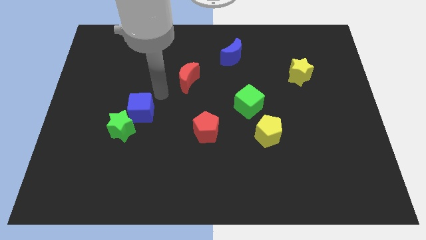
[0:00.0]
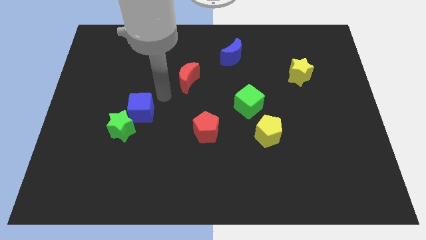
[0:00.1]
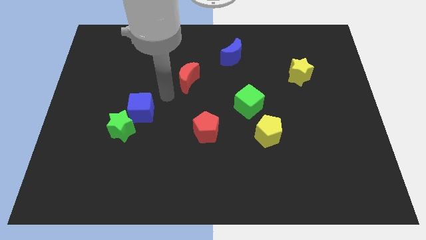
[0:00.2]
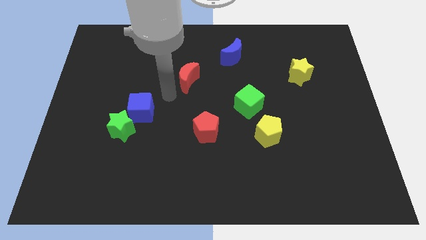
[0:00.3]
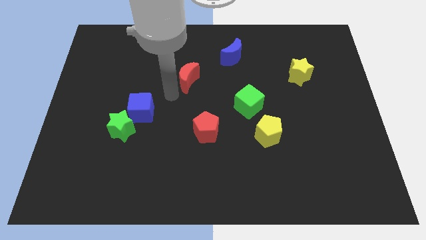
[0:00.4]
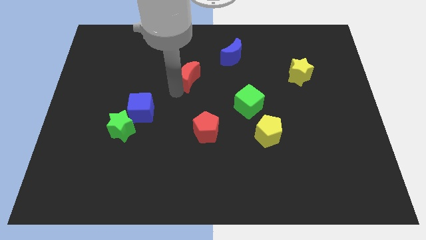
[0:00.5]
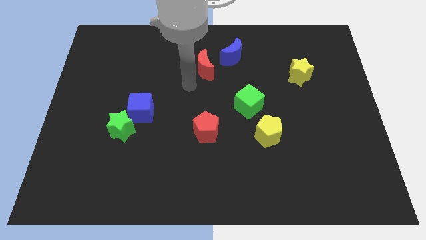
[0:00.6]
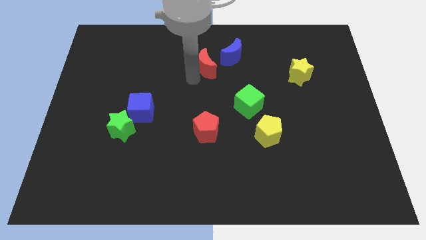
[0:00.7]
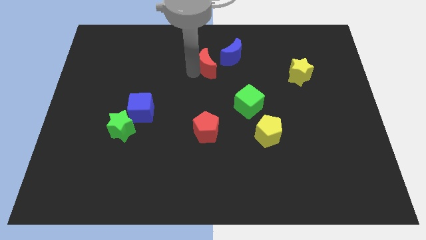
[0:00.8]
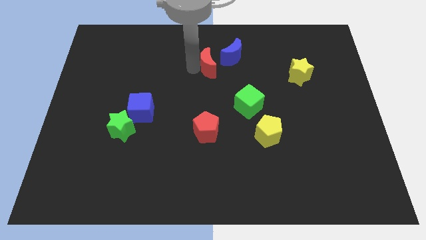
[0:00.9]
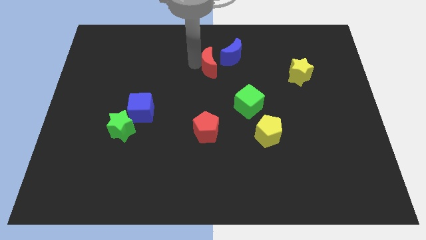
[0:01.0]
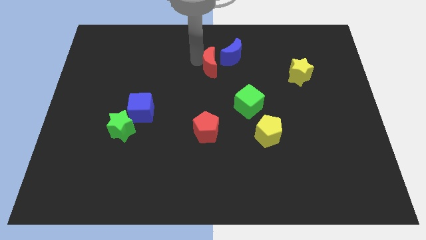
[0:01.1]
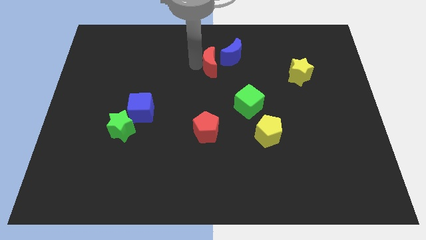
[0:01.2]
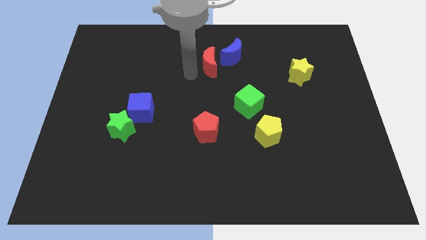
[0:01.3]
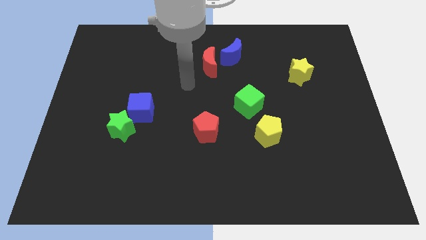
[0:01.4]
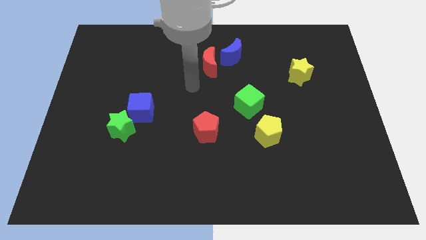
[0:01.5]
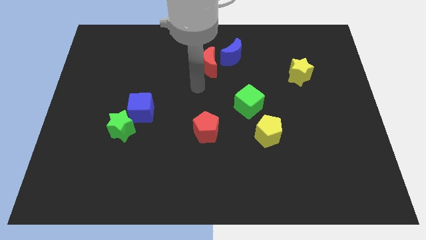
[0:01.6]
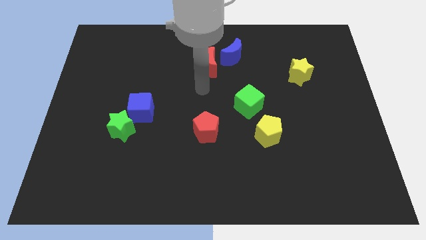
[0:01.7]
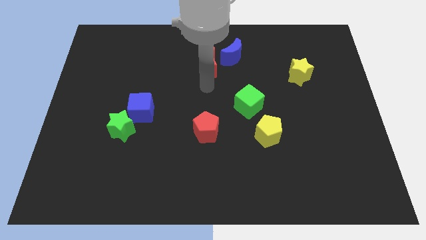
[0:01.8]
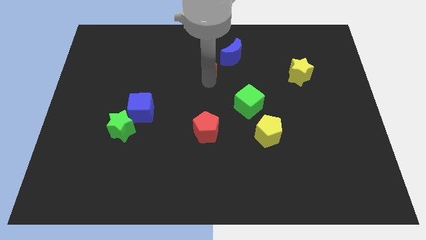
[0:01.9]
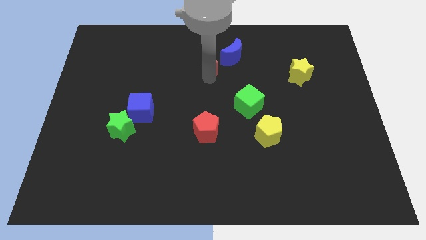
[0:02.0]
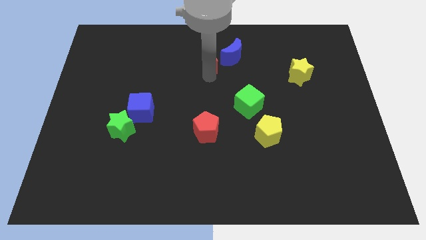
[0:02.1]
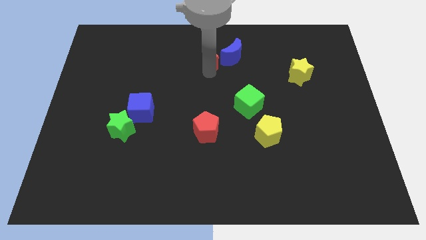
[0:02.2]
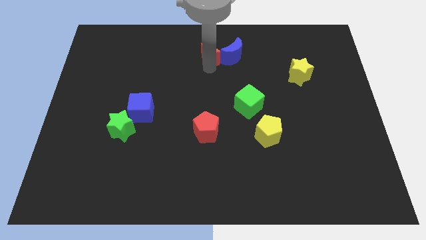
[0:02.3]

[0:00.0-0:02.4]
move the red moon to the left of the blue moon

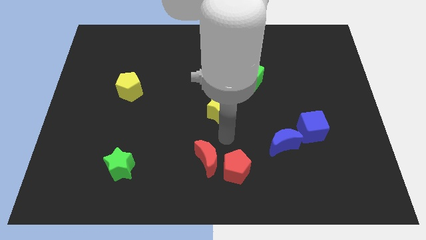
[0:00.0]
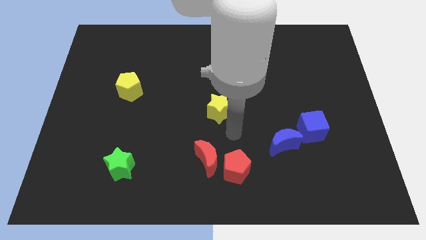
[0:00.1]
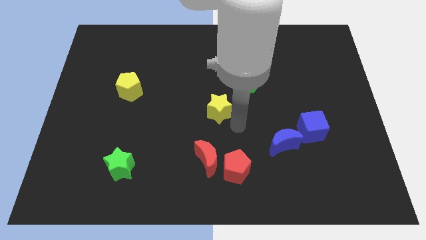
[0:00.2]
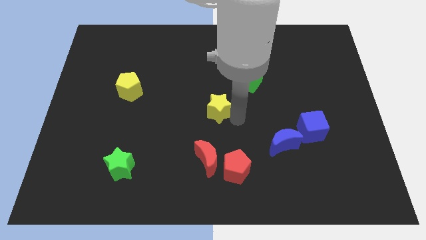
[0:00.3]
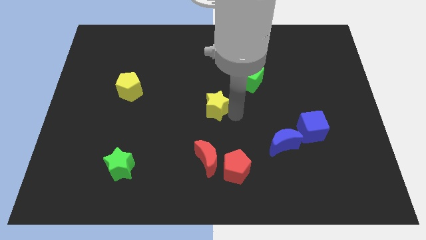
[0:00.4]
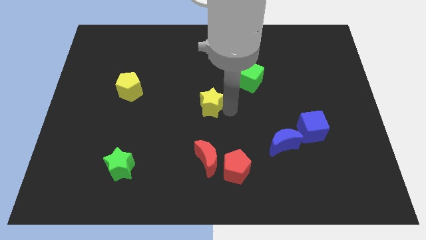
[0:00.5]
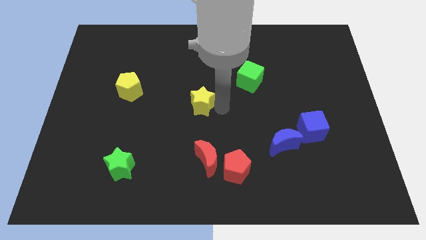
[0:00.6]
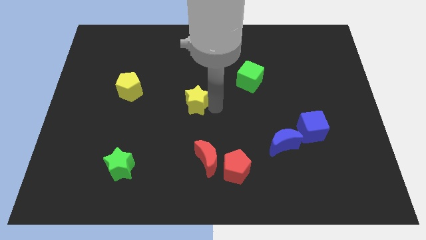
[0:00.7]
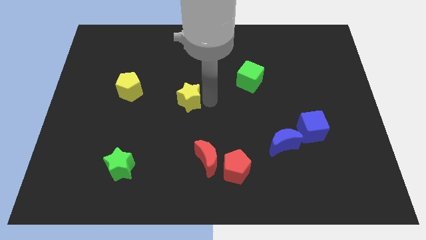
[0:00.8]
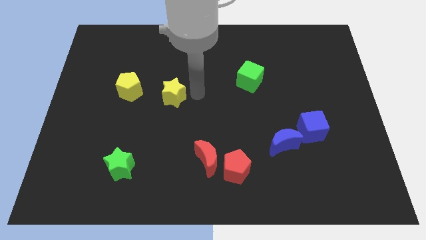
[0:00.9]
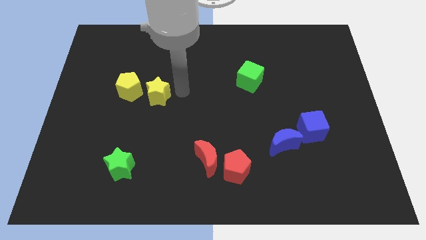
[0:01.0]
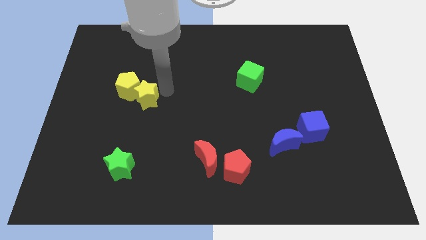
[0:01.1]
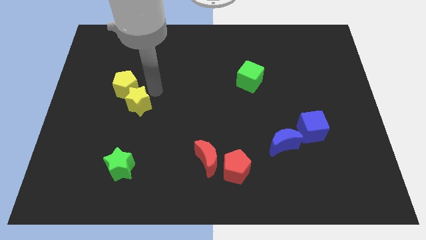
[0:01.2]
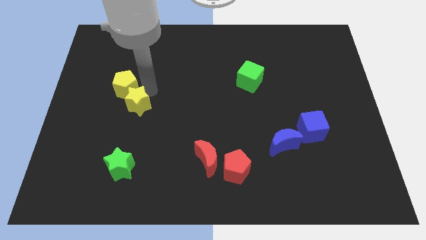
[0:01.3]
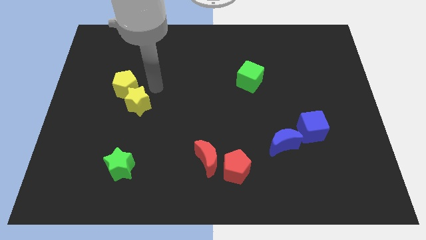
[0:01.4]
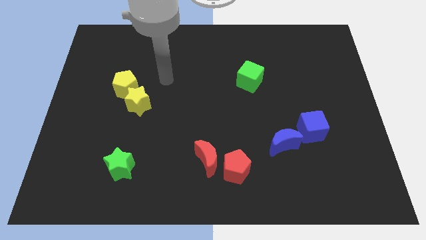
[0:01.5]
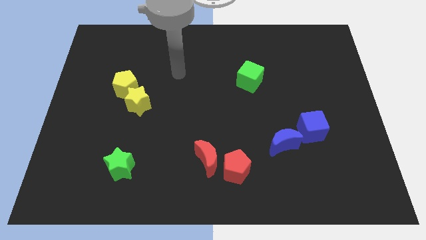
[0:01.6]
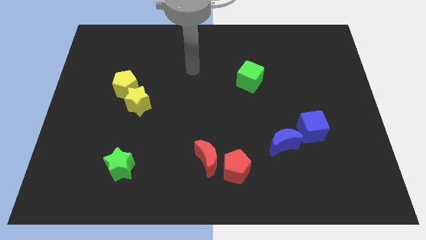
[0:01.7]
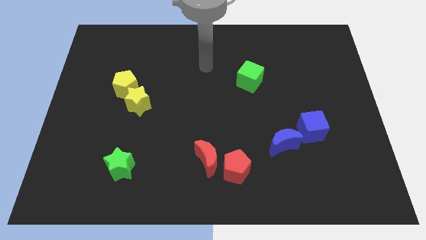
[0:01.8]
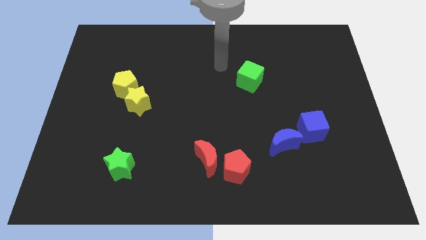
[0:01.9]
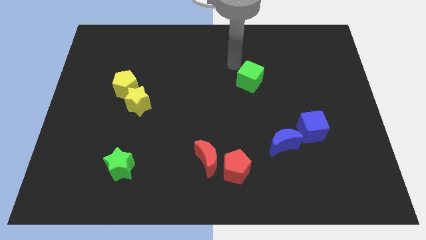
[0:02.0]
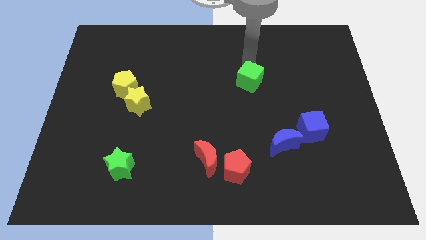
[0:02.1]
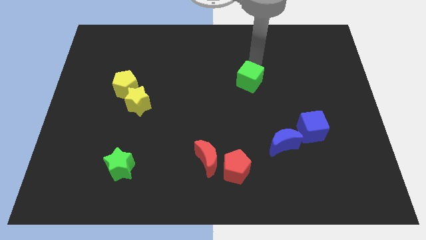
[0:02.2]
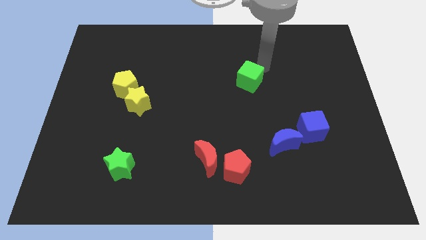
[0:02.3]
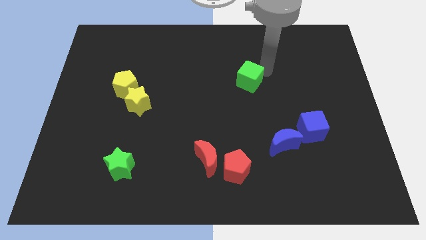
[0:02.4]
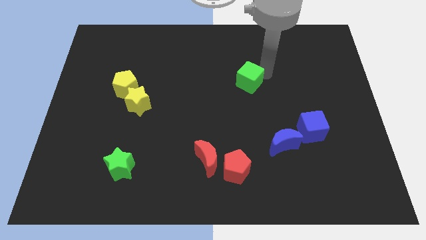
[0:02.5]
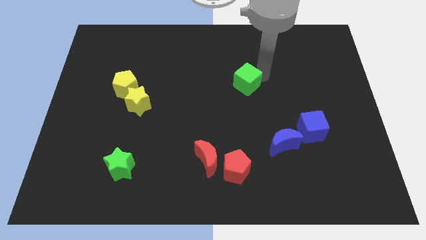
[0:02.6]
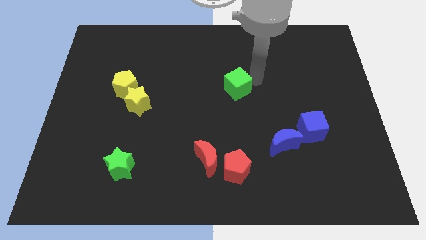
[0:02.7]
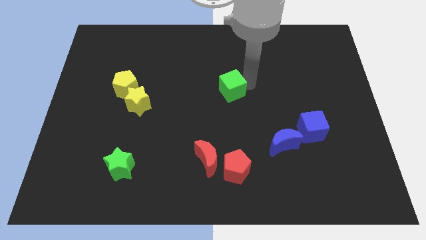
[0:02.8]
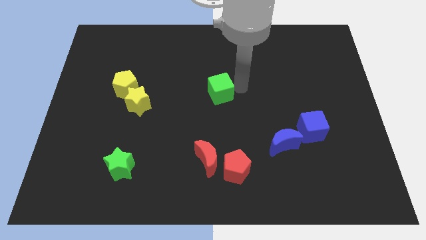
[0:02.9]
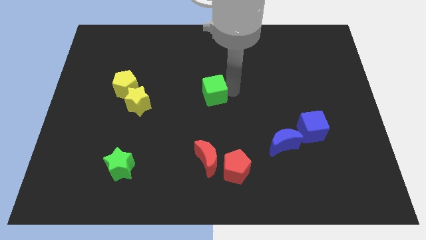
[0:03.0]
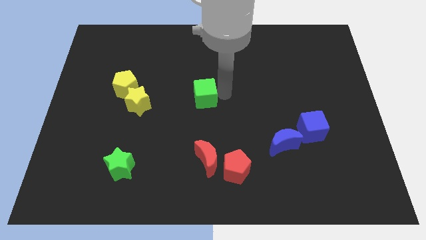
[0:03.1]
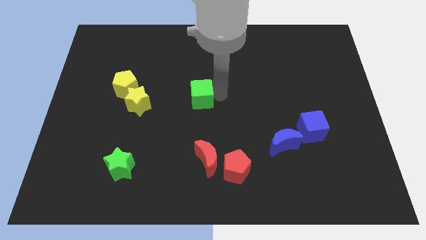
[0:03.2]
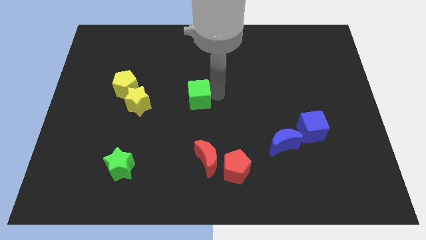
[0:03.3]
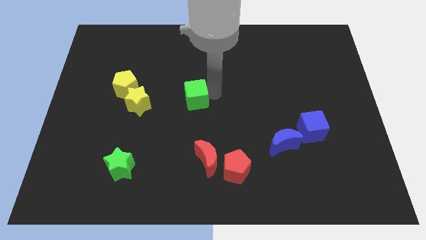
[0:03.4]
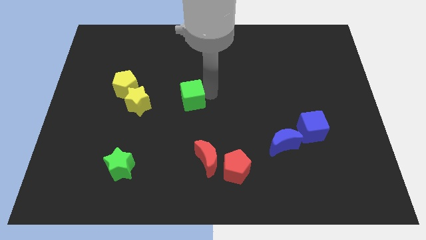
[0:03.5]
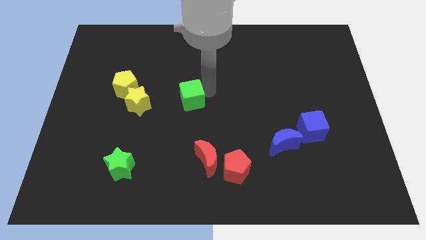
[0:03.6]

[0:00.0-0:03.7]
place the yellow star close to the yellow pentagon

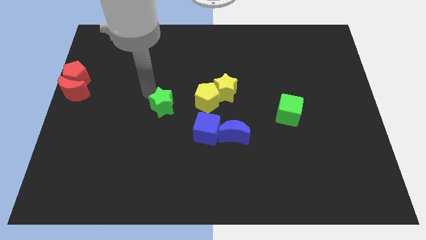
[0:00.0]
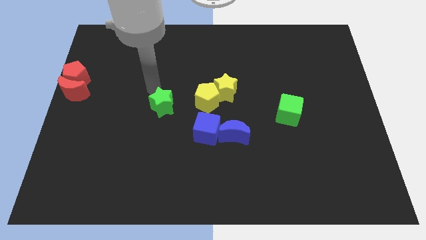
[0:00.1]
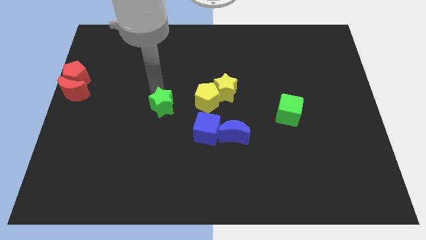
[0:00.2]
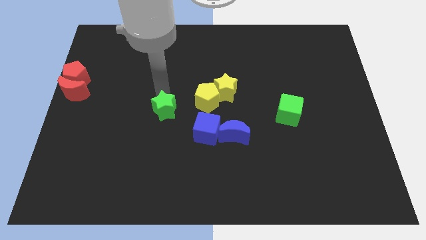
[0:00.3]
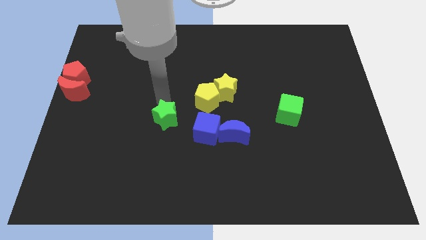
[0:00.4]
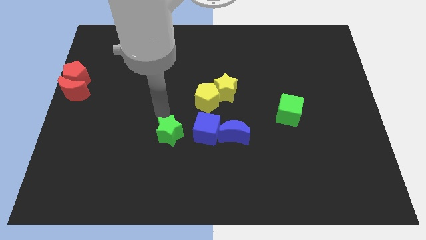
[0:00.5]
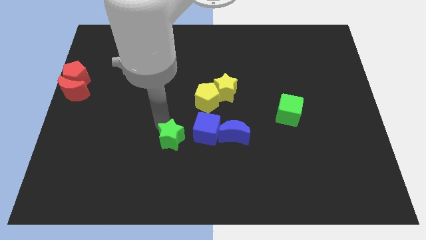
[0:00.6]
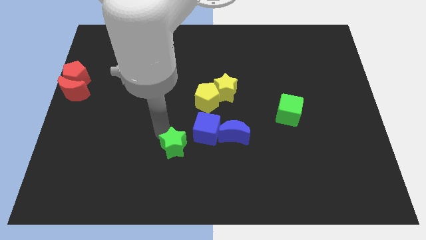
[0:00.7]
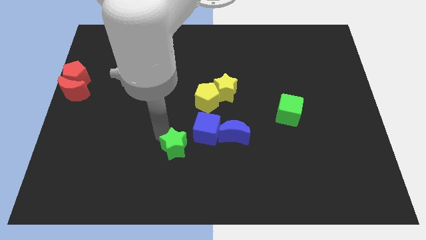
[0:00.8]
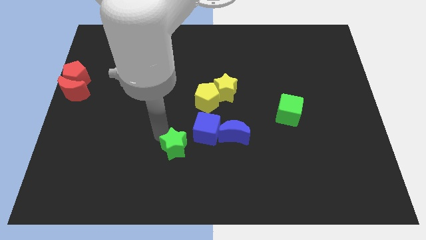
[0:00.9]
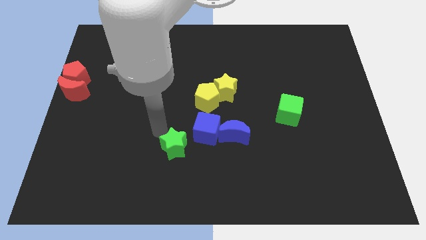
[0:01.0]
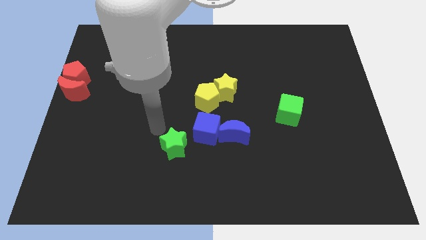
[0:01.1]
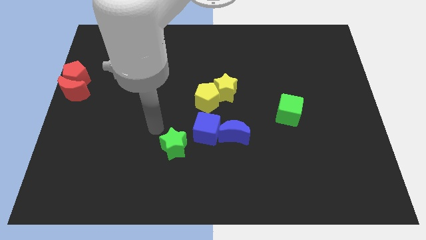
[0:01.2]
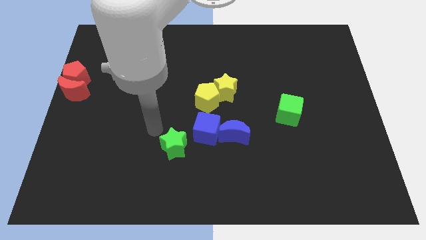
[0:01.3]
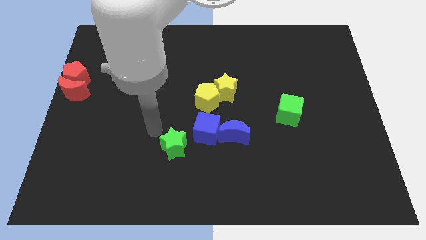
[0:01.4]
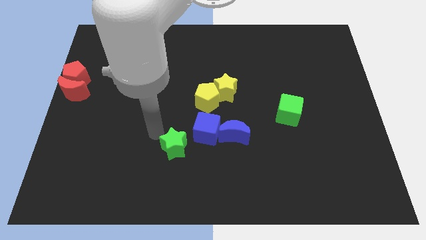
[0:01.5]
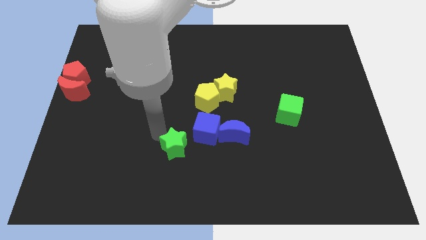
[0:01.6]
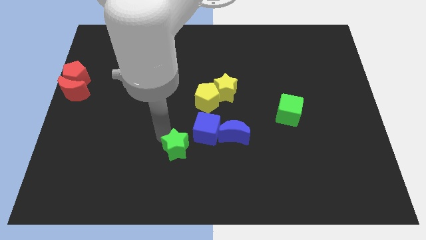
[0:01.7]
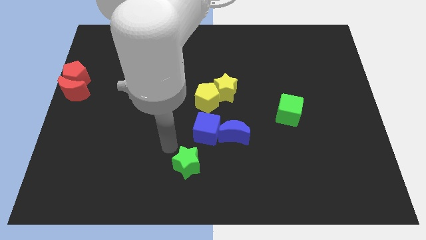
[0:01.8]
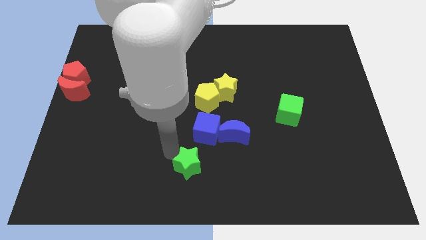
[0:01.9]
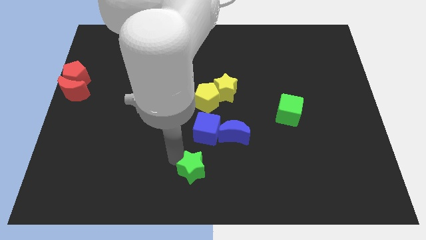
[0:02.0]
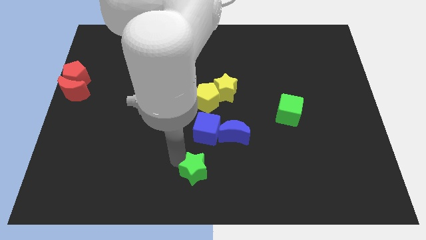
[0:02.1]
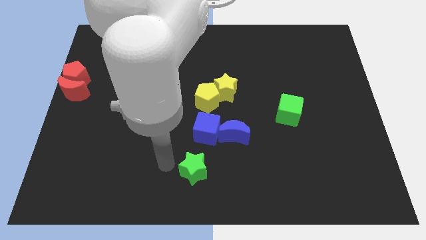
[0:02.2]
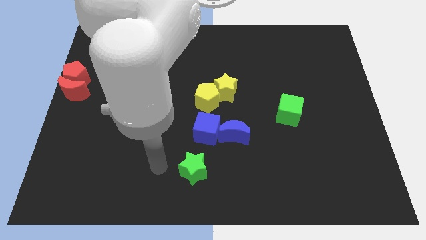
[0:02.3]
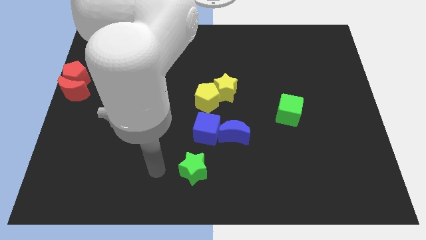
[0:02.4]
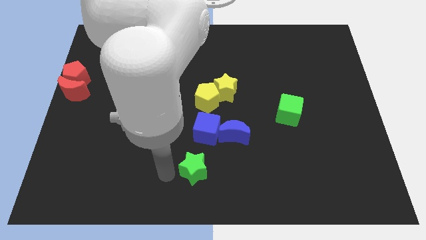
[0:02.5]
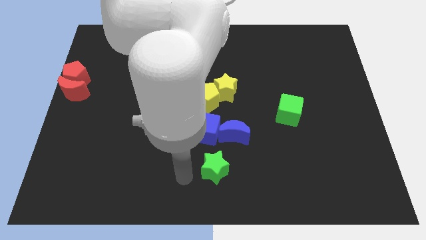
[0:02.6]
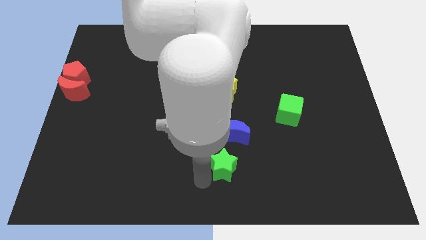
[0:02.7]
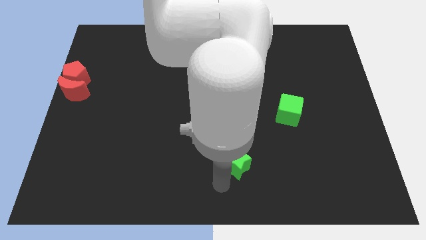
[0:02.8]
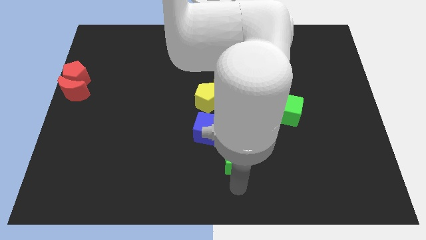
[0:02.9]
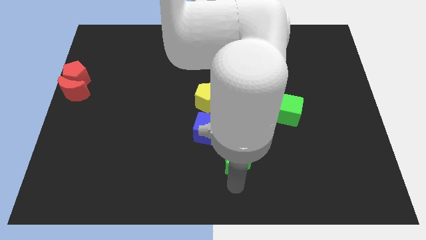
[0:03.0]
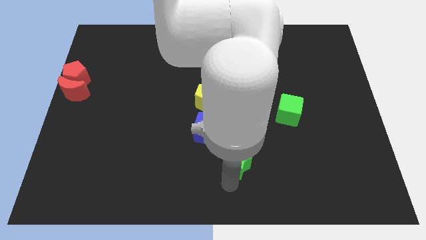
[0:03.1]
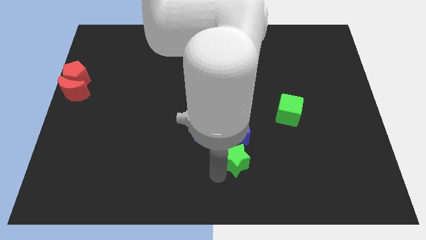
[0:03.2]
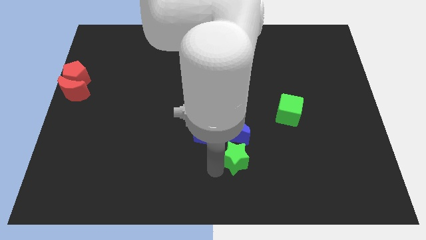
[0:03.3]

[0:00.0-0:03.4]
move the green star to the bottom of the blue crescent
